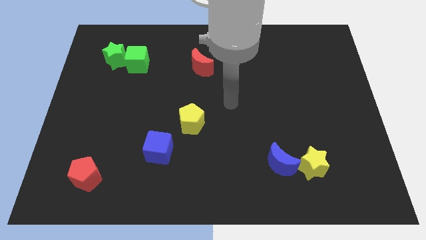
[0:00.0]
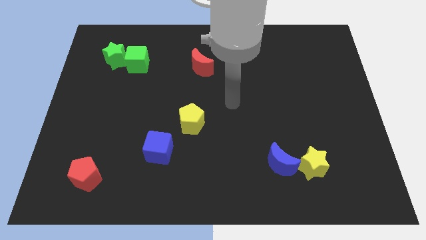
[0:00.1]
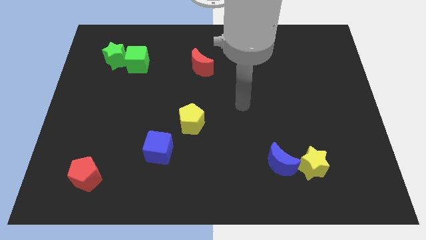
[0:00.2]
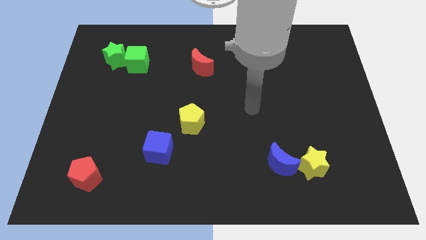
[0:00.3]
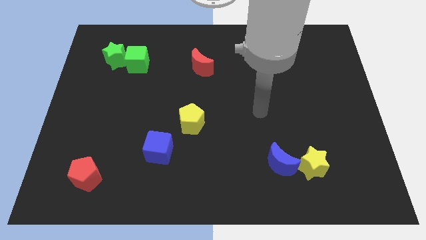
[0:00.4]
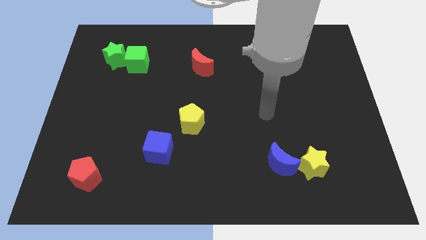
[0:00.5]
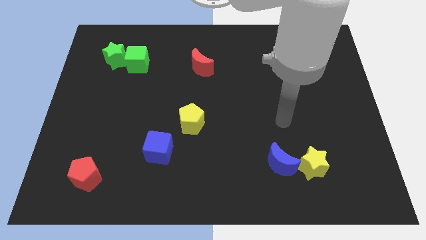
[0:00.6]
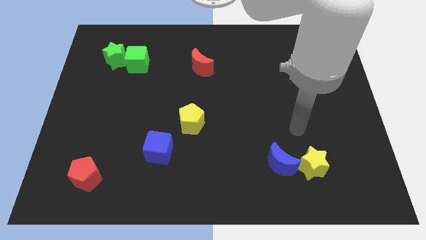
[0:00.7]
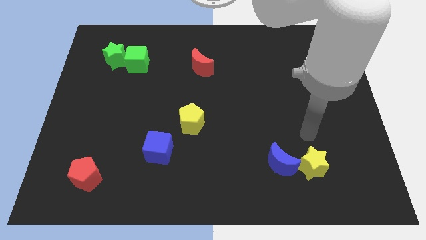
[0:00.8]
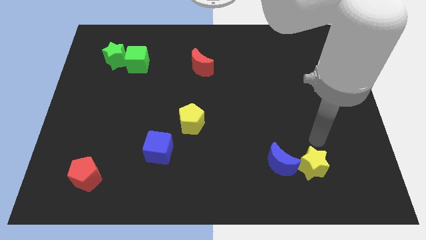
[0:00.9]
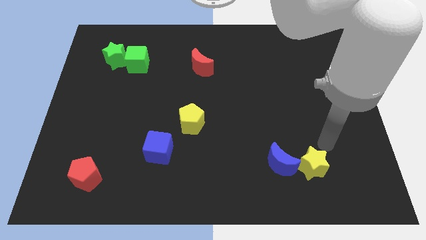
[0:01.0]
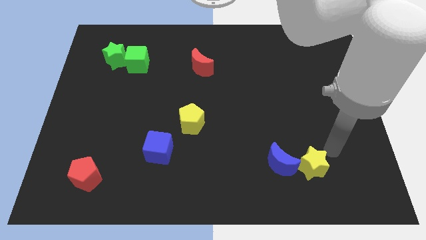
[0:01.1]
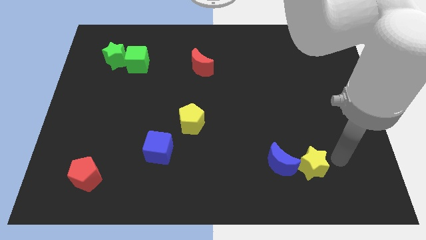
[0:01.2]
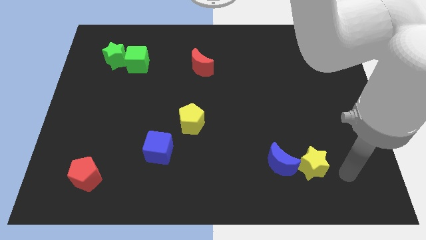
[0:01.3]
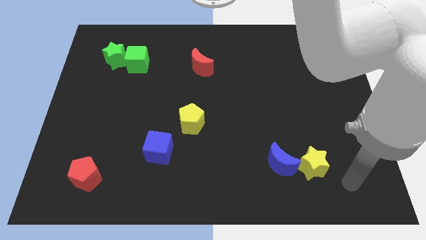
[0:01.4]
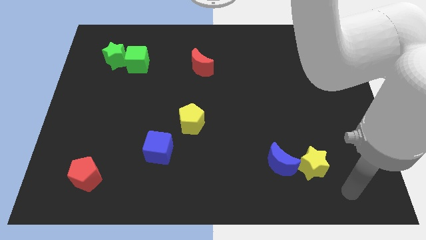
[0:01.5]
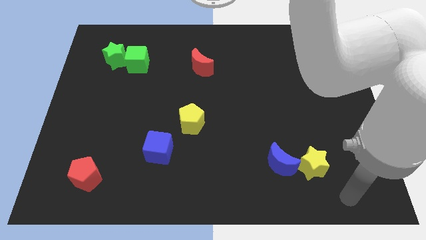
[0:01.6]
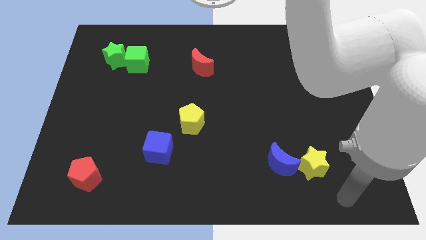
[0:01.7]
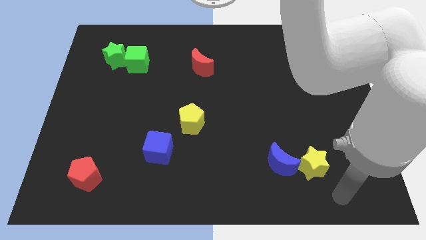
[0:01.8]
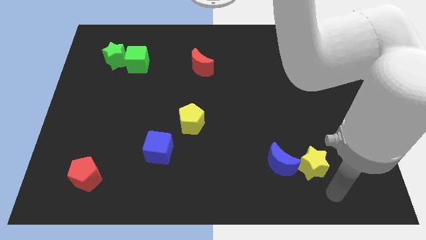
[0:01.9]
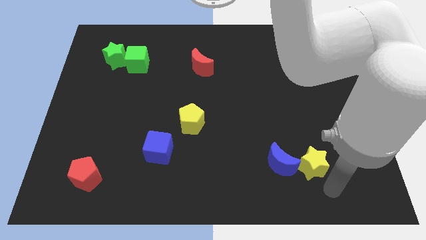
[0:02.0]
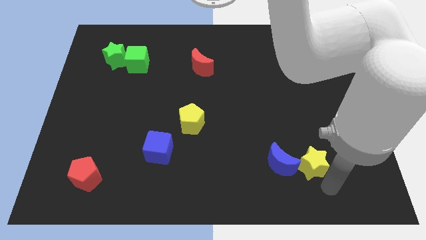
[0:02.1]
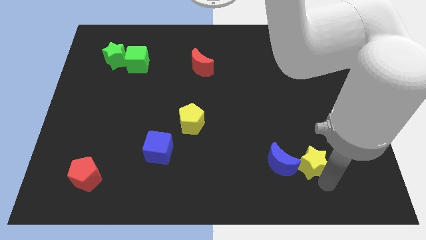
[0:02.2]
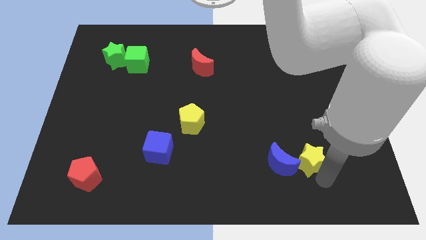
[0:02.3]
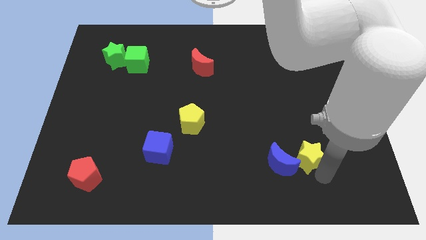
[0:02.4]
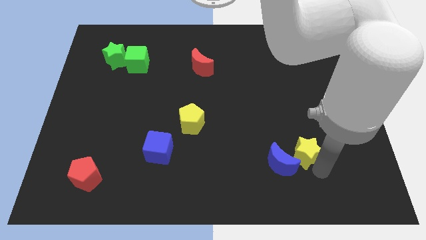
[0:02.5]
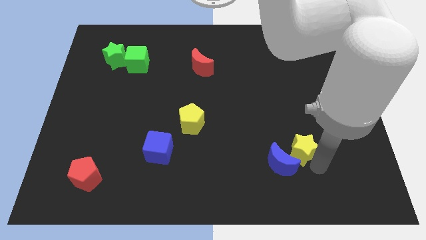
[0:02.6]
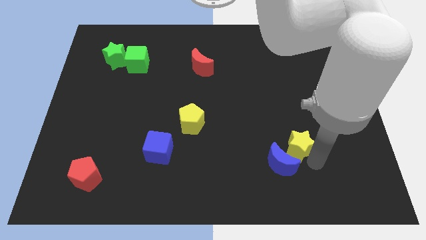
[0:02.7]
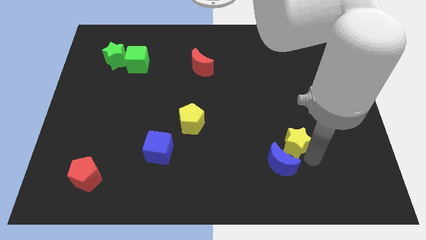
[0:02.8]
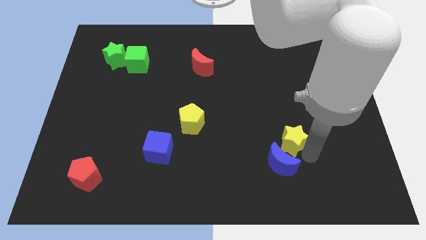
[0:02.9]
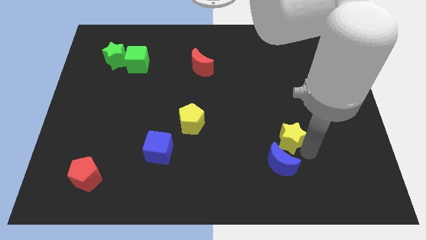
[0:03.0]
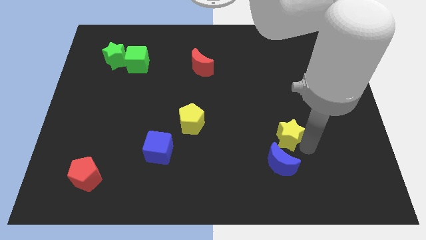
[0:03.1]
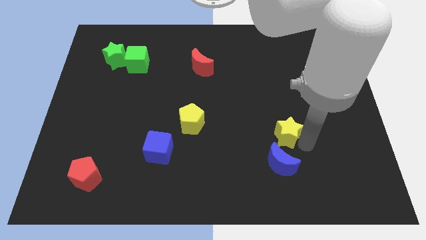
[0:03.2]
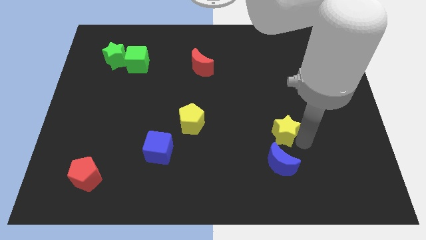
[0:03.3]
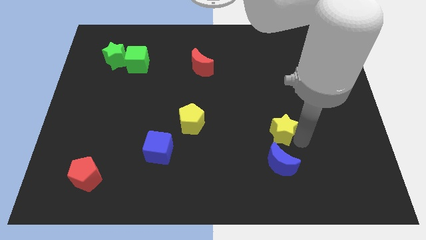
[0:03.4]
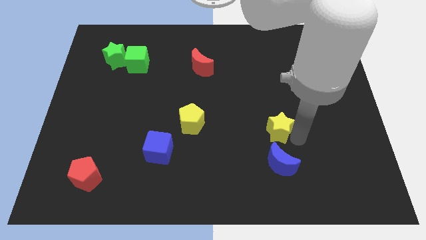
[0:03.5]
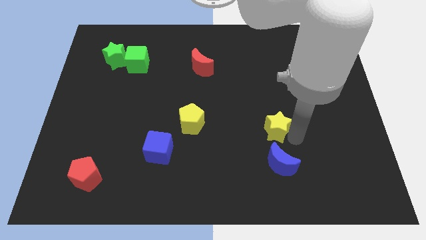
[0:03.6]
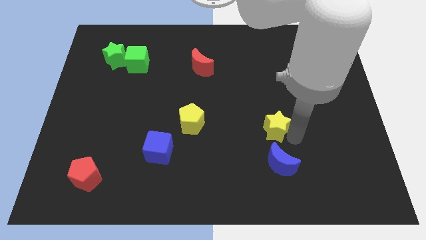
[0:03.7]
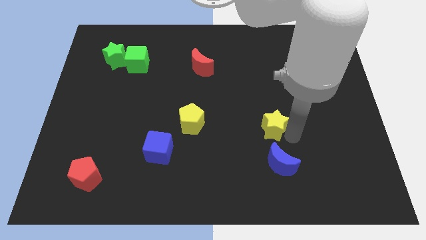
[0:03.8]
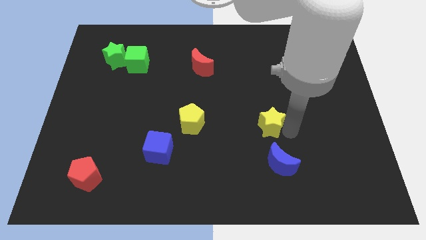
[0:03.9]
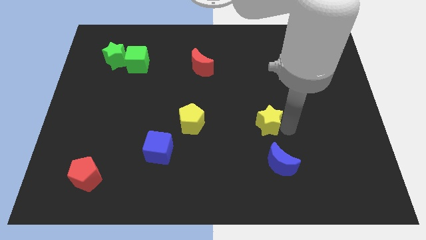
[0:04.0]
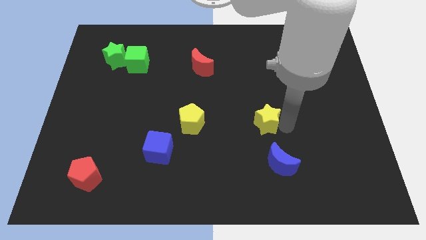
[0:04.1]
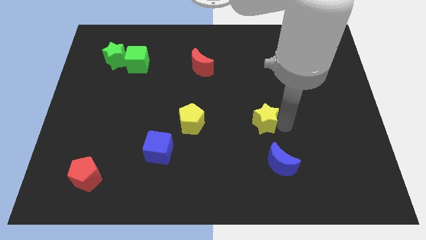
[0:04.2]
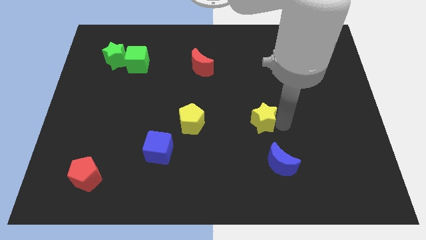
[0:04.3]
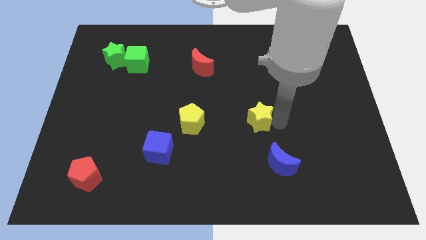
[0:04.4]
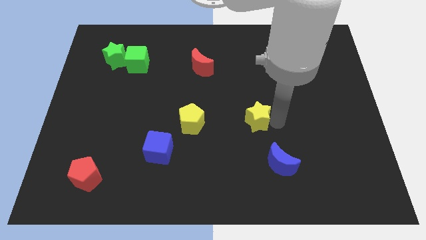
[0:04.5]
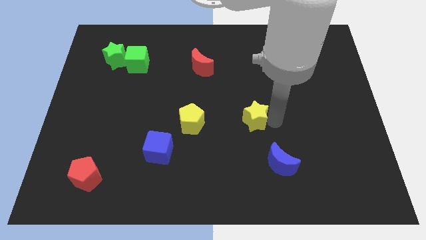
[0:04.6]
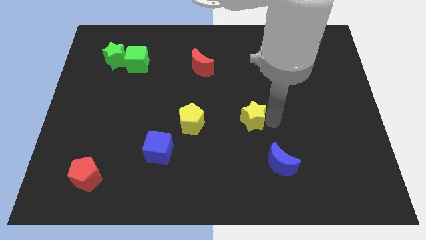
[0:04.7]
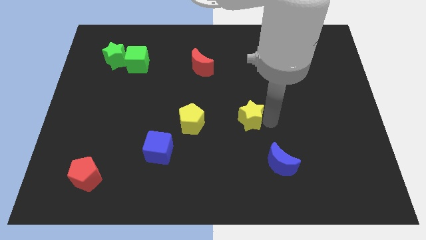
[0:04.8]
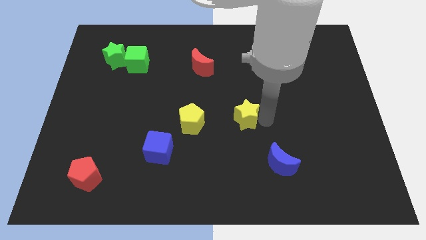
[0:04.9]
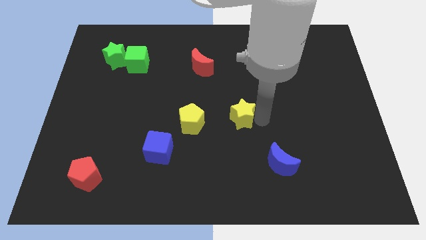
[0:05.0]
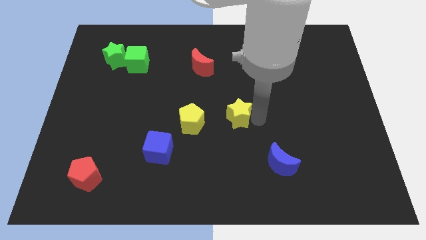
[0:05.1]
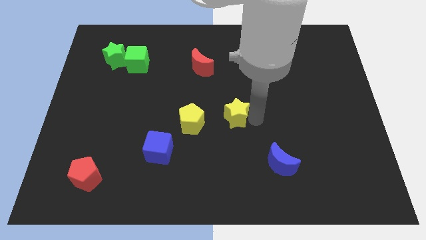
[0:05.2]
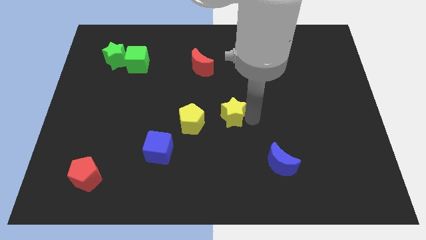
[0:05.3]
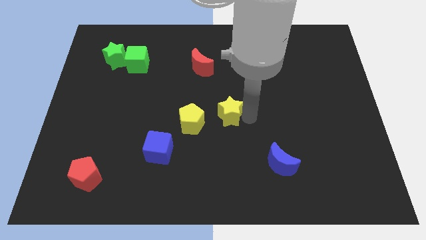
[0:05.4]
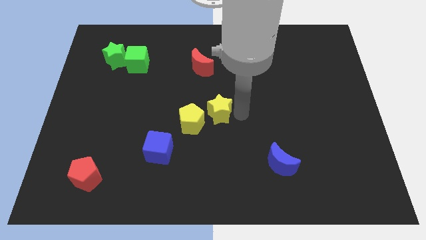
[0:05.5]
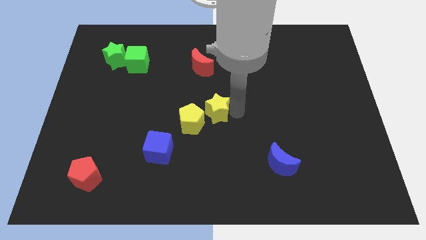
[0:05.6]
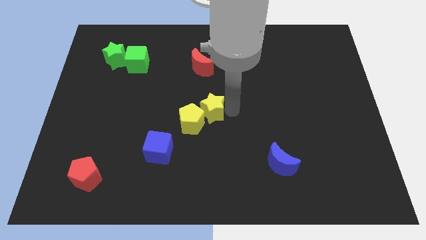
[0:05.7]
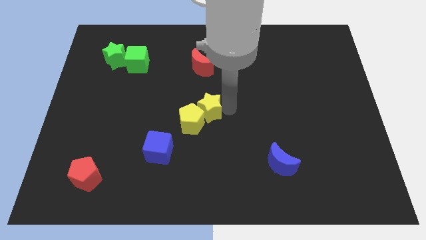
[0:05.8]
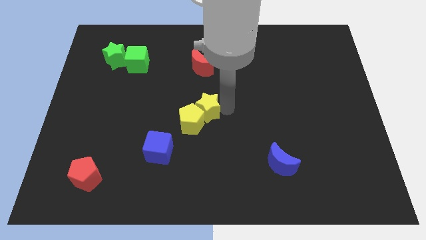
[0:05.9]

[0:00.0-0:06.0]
push the yellow star close to the yellow pentagon

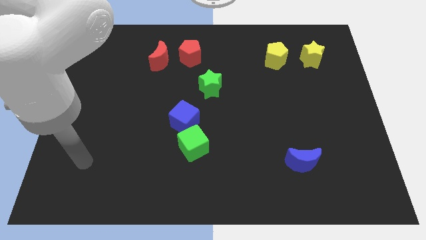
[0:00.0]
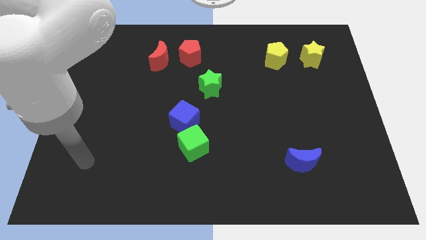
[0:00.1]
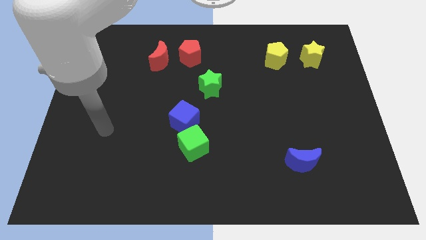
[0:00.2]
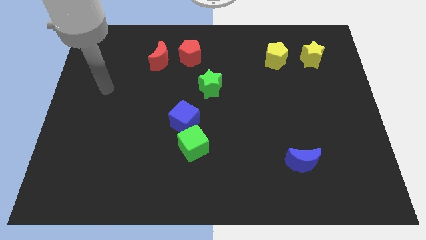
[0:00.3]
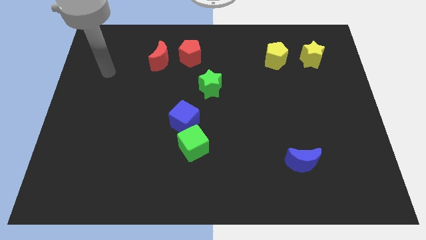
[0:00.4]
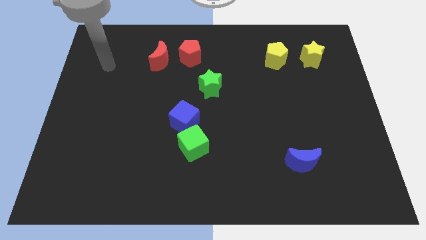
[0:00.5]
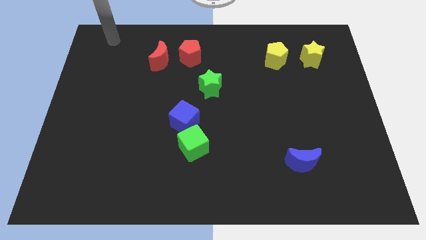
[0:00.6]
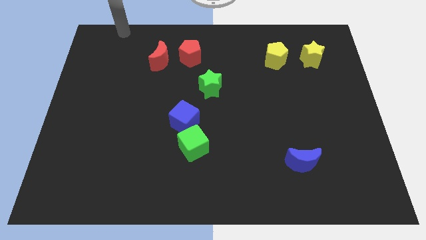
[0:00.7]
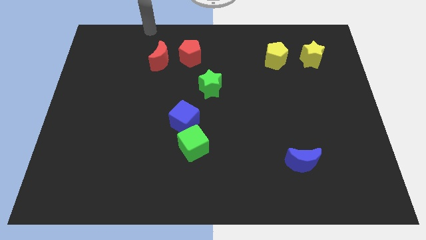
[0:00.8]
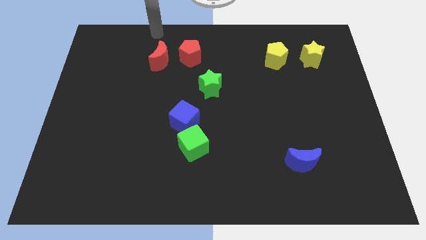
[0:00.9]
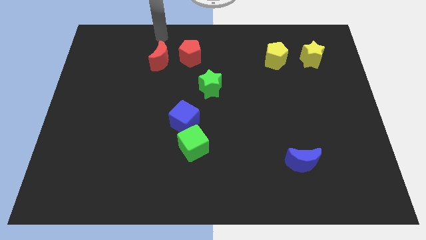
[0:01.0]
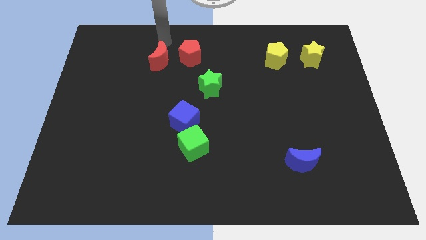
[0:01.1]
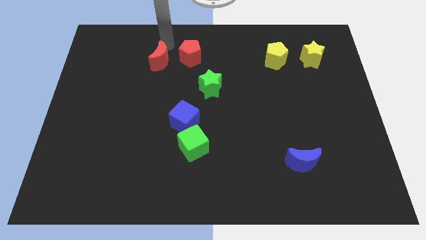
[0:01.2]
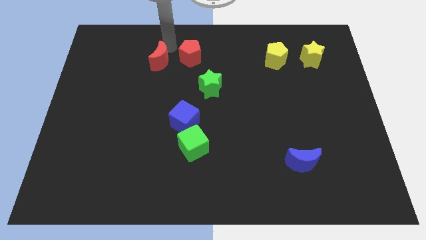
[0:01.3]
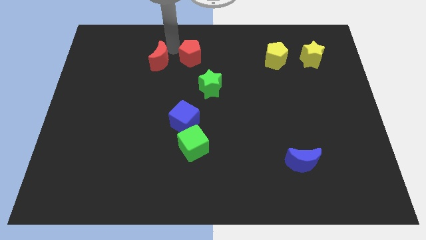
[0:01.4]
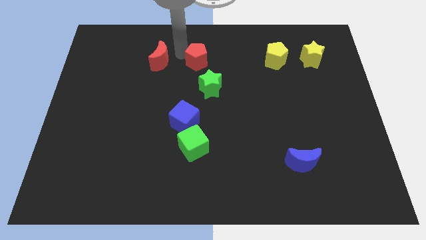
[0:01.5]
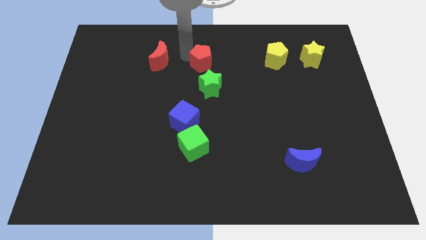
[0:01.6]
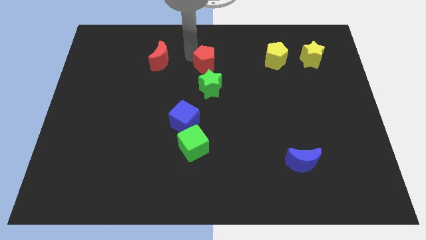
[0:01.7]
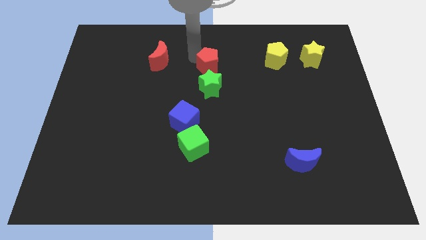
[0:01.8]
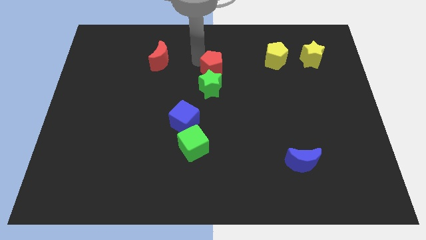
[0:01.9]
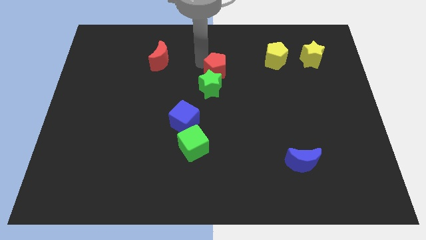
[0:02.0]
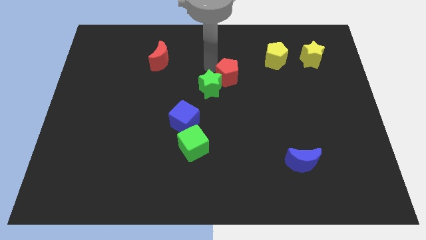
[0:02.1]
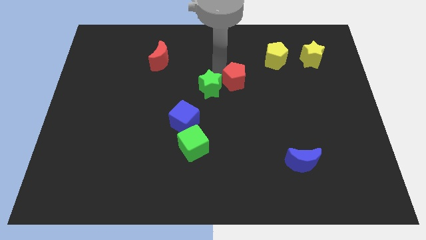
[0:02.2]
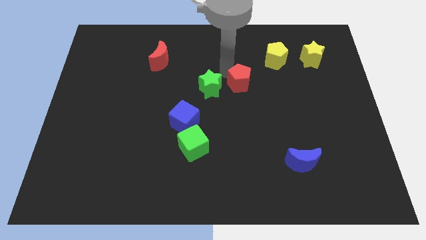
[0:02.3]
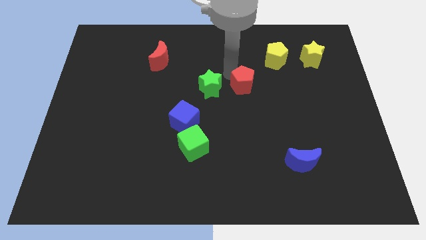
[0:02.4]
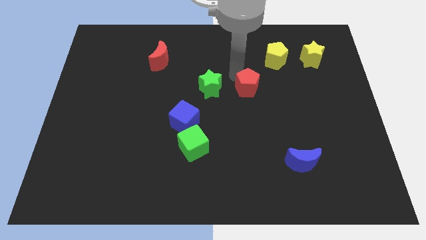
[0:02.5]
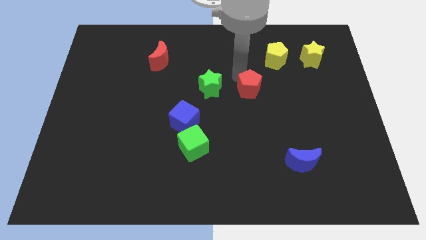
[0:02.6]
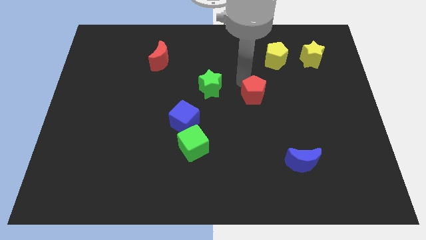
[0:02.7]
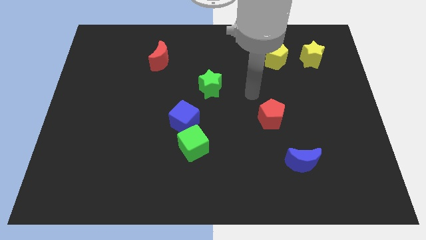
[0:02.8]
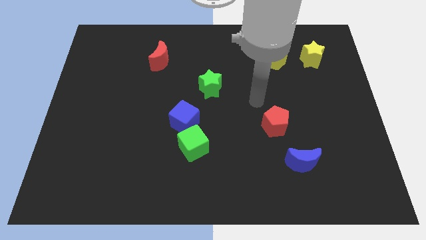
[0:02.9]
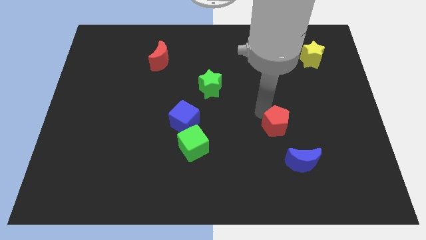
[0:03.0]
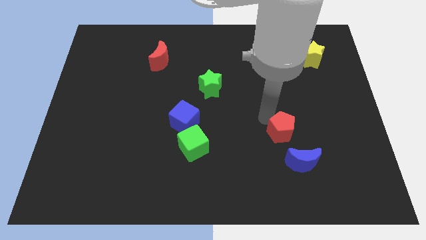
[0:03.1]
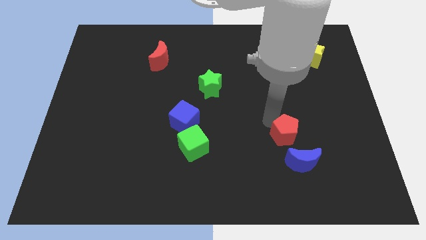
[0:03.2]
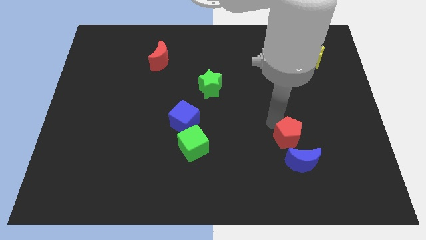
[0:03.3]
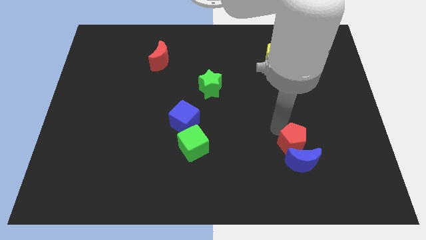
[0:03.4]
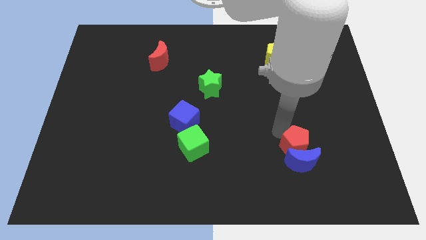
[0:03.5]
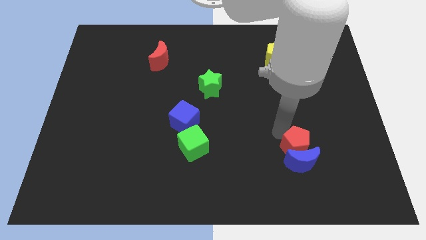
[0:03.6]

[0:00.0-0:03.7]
put the red pentagon to the blue moon
